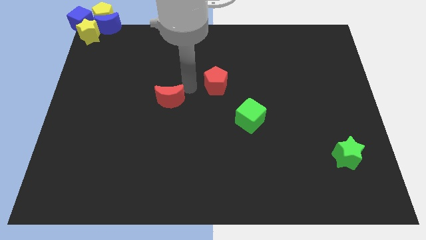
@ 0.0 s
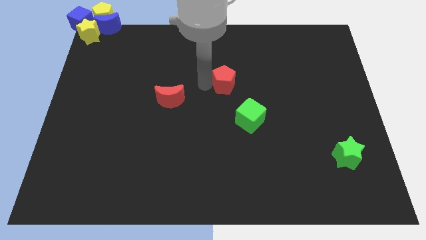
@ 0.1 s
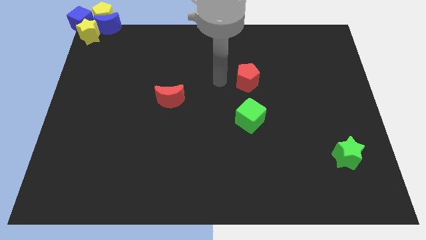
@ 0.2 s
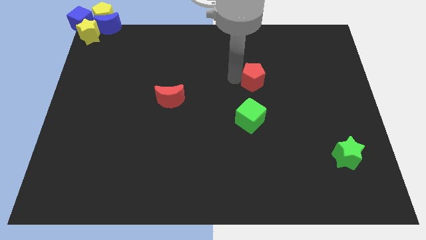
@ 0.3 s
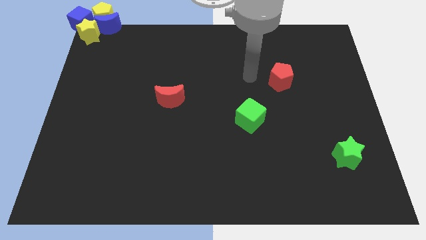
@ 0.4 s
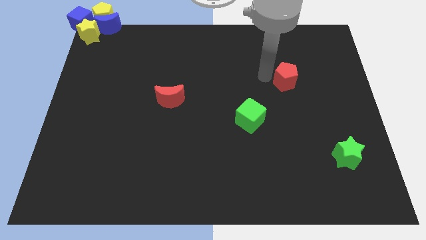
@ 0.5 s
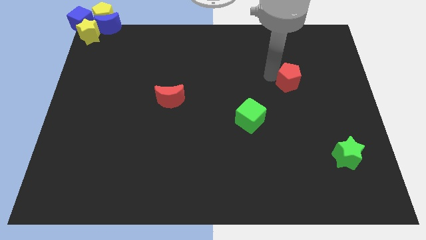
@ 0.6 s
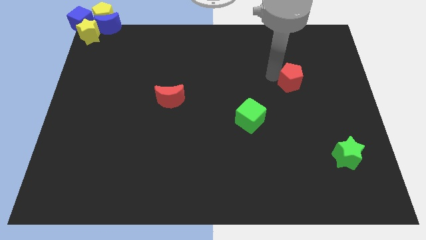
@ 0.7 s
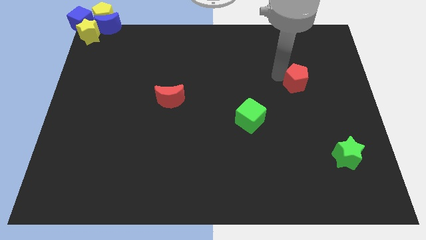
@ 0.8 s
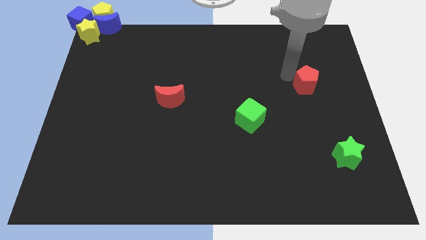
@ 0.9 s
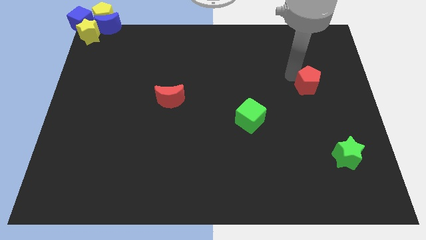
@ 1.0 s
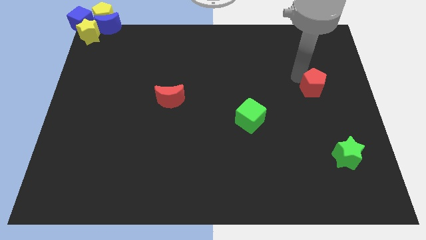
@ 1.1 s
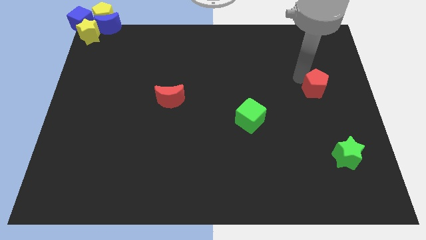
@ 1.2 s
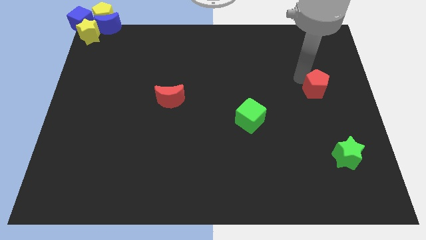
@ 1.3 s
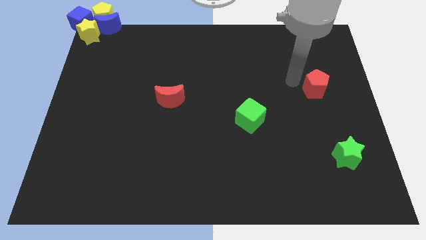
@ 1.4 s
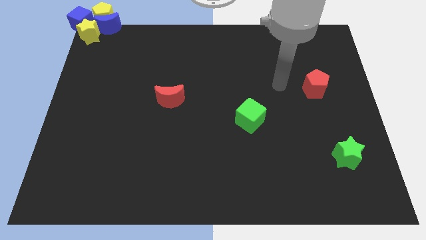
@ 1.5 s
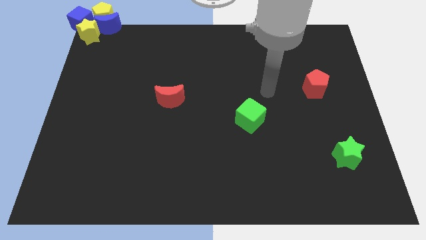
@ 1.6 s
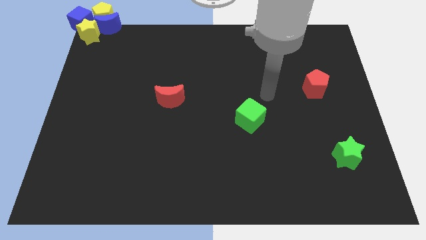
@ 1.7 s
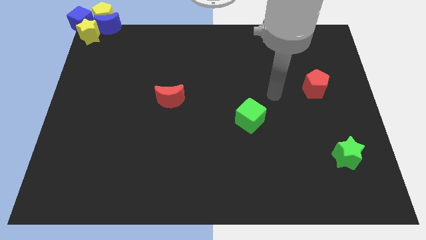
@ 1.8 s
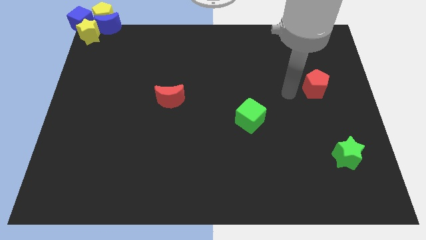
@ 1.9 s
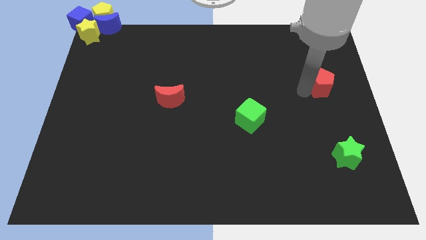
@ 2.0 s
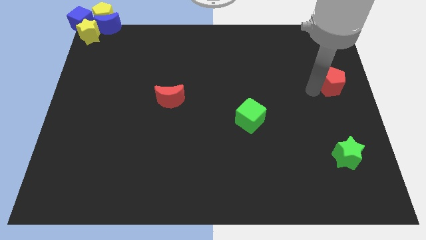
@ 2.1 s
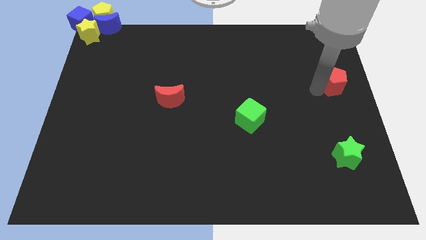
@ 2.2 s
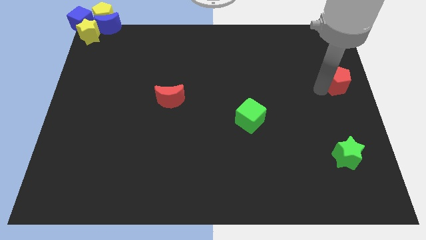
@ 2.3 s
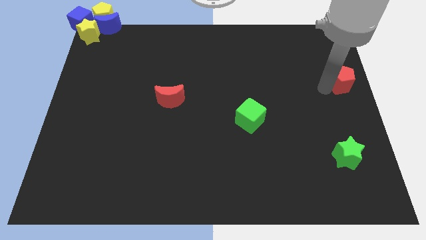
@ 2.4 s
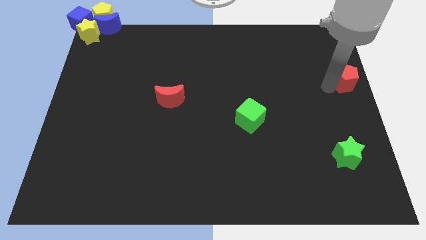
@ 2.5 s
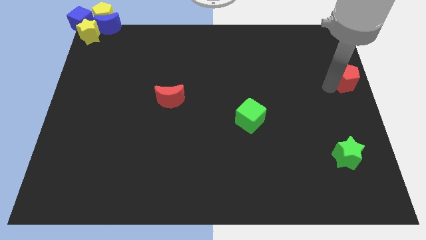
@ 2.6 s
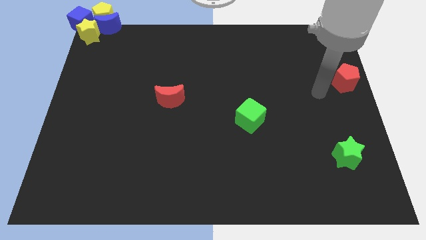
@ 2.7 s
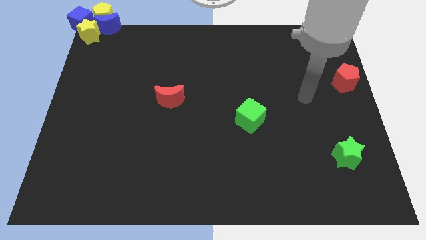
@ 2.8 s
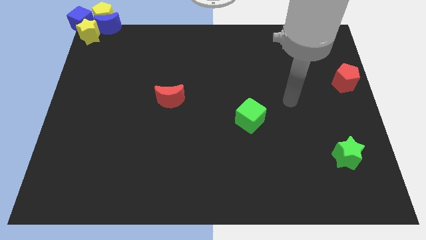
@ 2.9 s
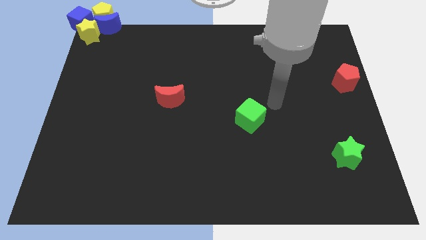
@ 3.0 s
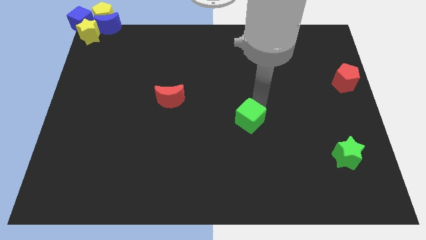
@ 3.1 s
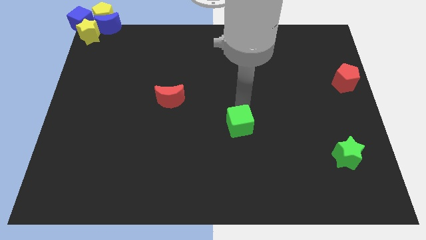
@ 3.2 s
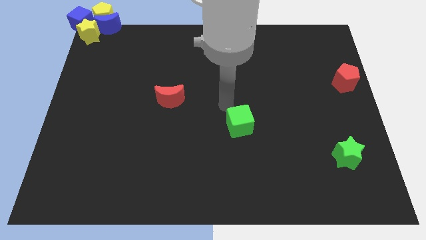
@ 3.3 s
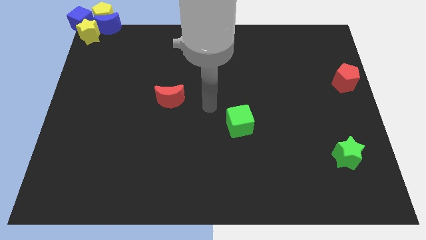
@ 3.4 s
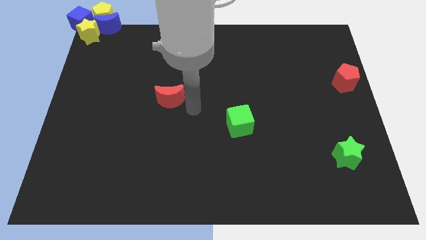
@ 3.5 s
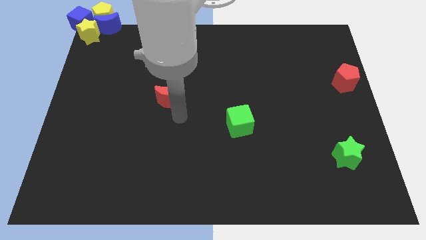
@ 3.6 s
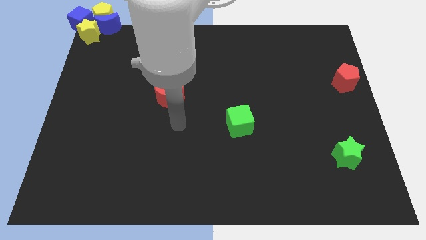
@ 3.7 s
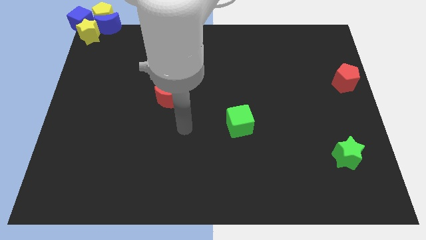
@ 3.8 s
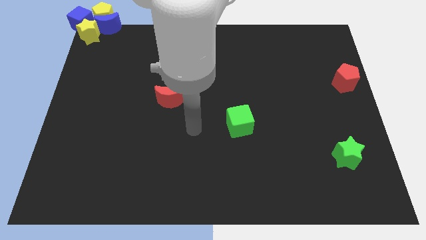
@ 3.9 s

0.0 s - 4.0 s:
move red crescent to the top right of the board

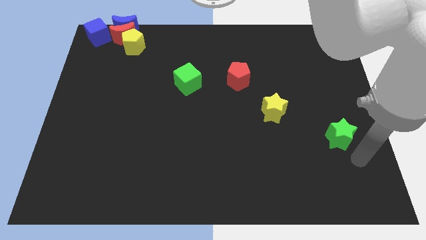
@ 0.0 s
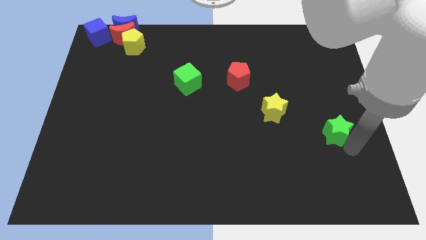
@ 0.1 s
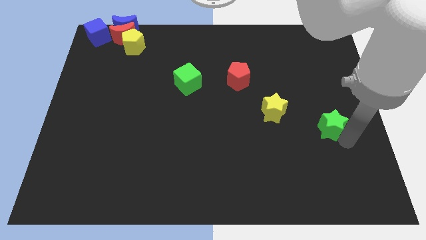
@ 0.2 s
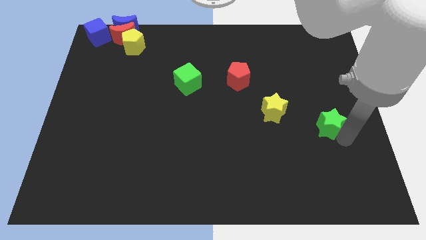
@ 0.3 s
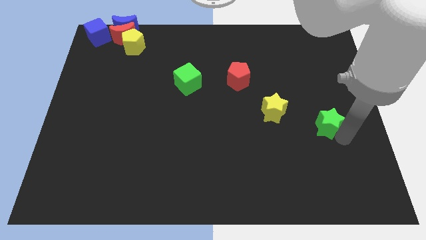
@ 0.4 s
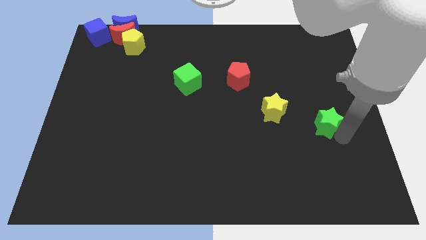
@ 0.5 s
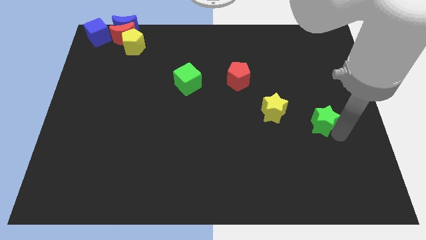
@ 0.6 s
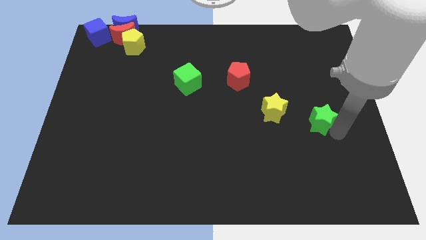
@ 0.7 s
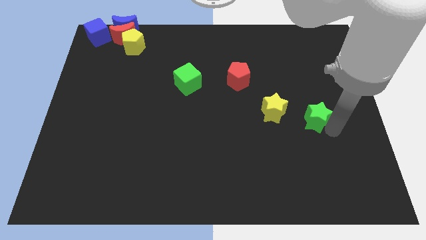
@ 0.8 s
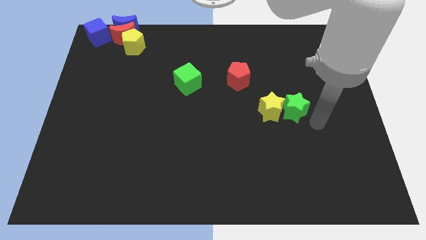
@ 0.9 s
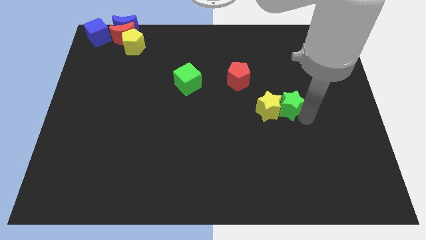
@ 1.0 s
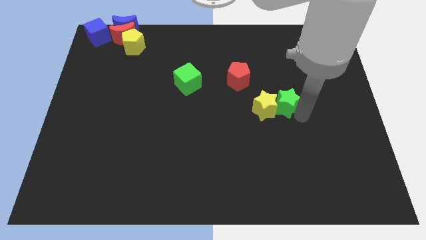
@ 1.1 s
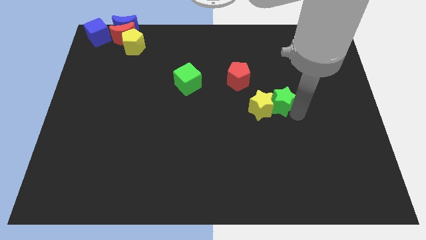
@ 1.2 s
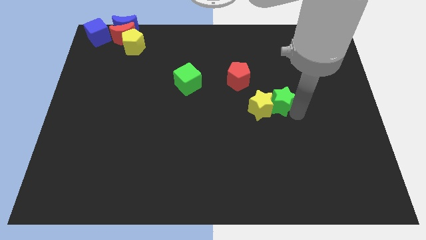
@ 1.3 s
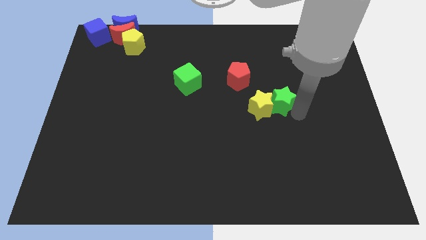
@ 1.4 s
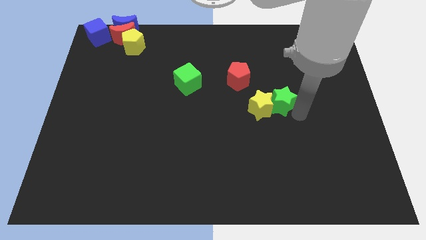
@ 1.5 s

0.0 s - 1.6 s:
push green star close to the yellow star

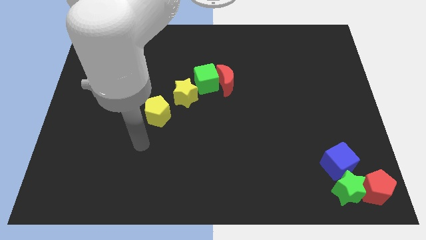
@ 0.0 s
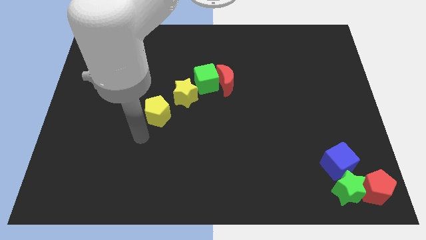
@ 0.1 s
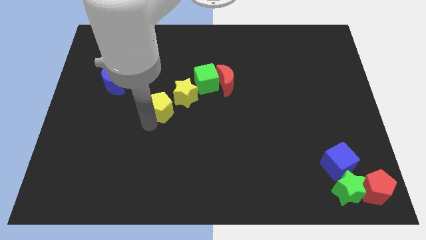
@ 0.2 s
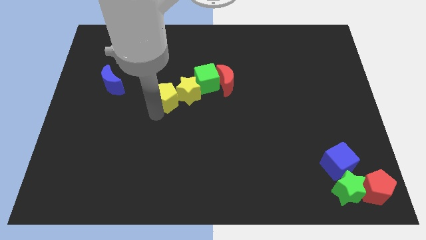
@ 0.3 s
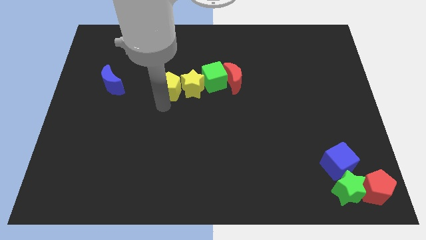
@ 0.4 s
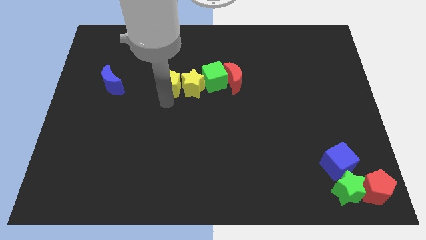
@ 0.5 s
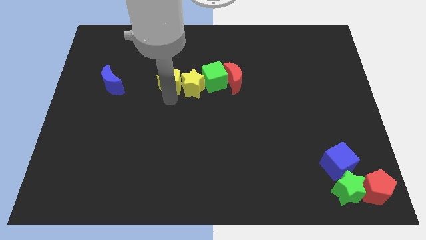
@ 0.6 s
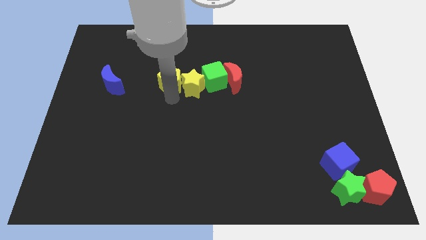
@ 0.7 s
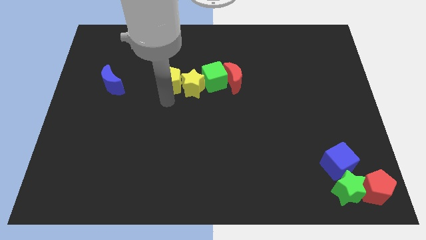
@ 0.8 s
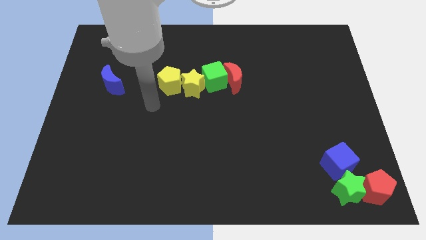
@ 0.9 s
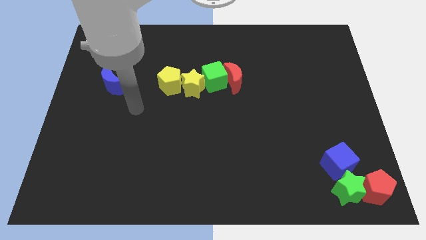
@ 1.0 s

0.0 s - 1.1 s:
place the yellow pentagon horizontal to the left of the yellow star

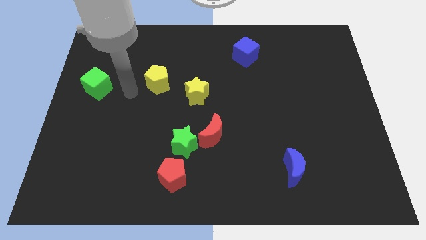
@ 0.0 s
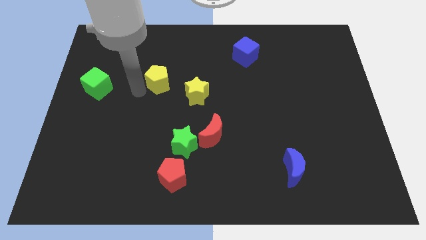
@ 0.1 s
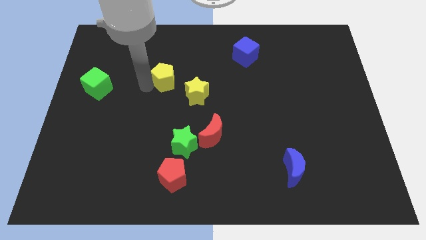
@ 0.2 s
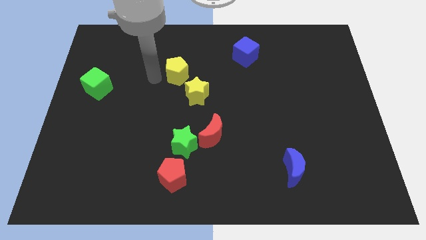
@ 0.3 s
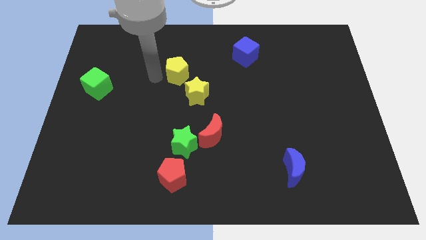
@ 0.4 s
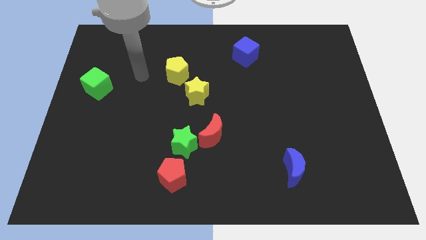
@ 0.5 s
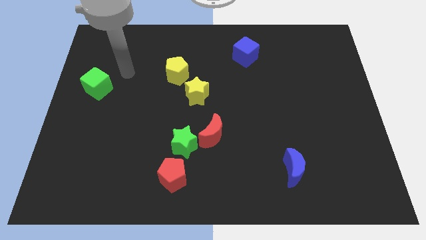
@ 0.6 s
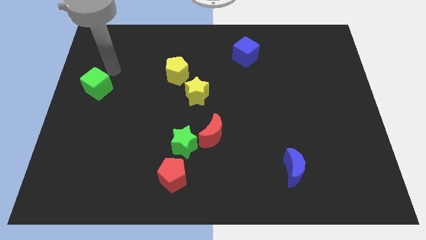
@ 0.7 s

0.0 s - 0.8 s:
push the yellow pentagon close to the yellow star

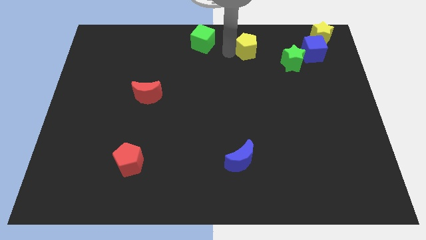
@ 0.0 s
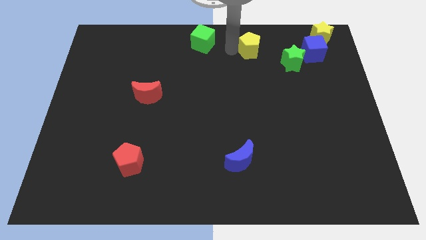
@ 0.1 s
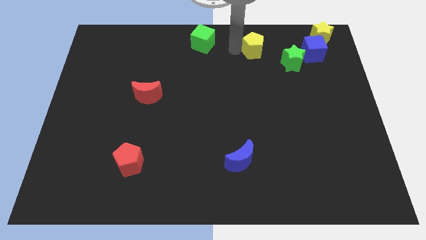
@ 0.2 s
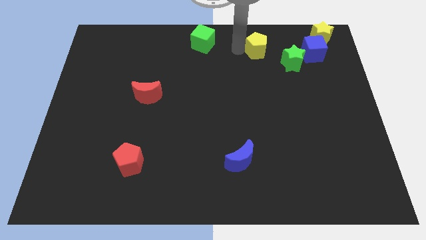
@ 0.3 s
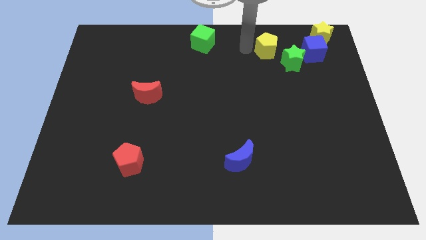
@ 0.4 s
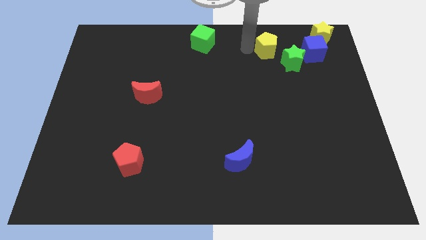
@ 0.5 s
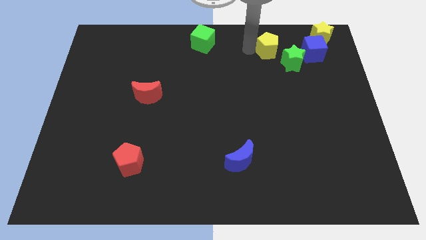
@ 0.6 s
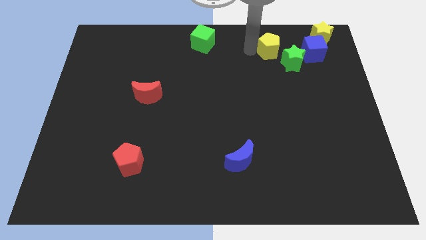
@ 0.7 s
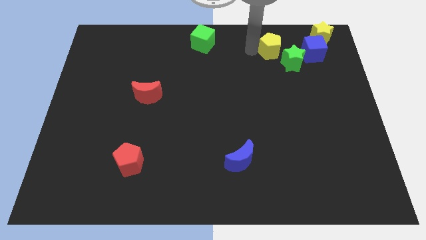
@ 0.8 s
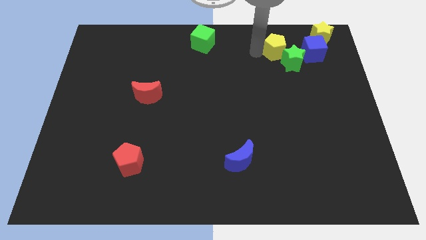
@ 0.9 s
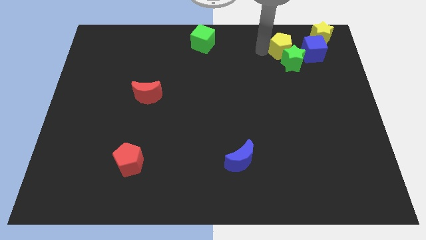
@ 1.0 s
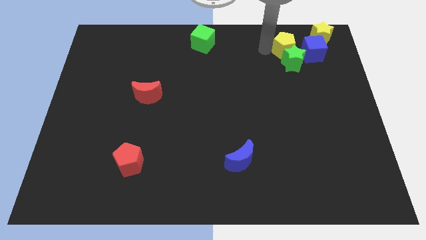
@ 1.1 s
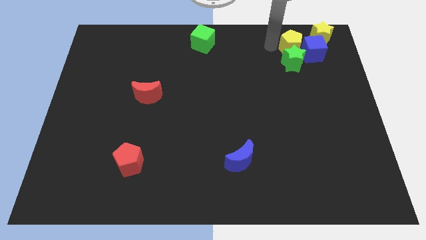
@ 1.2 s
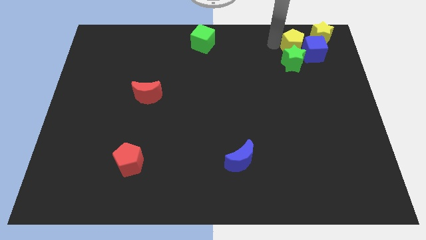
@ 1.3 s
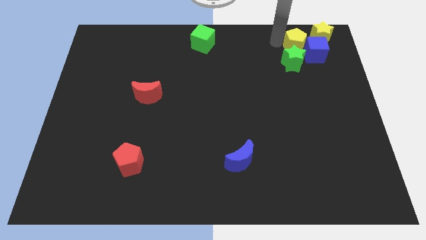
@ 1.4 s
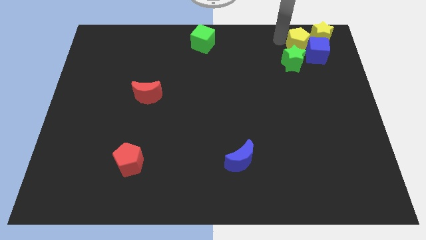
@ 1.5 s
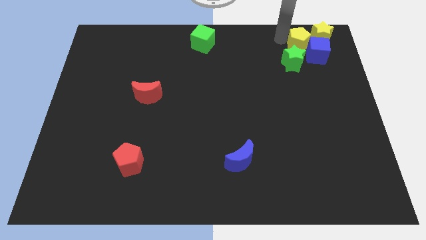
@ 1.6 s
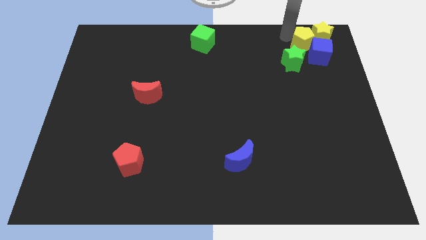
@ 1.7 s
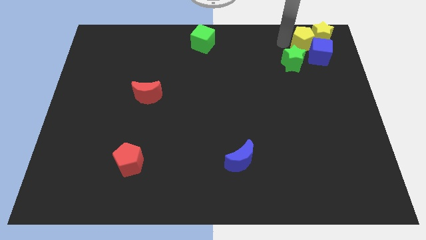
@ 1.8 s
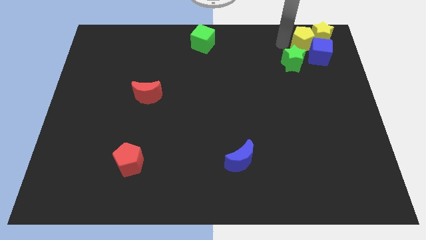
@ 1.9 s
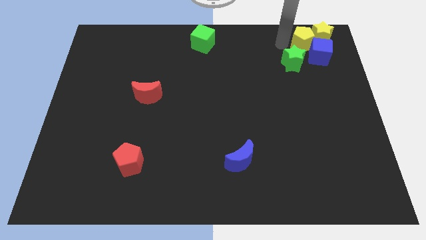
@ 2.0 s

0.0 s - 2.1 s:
push the yellow pentagon into the group of blocks
